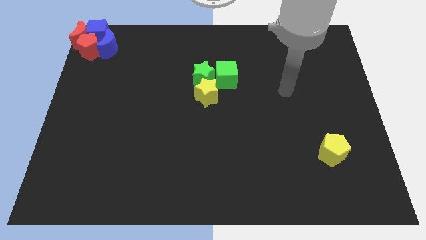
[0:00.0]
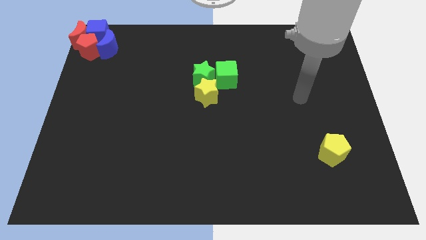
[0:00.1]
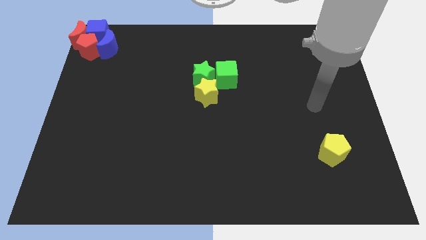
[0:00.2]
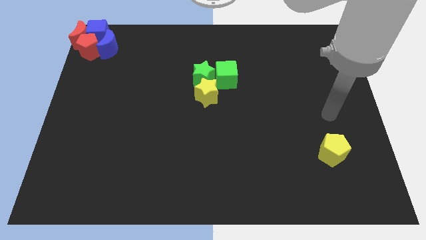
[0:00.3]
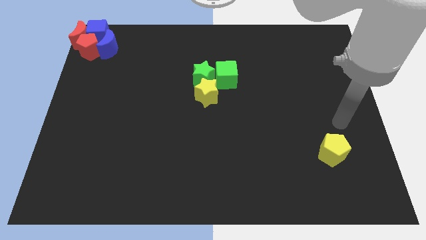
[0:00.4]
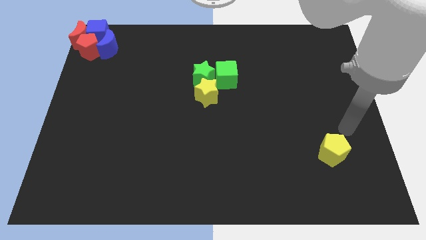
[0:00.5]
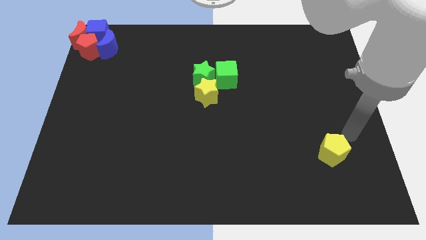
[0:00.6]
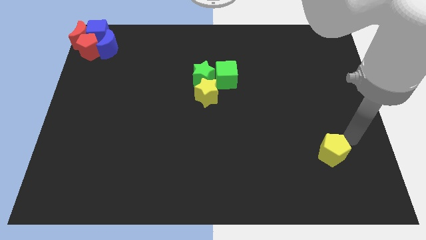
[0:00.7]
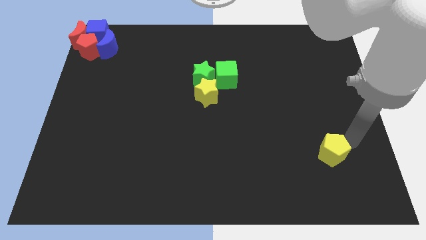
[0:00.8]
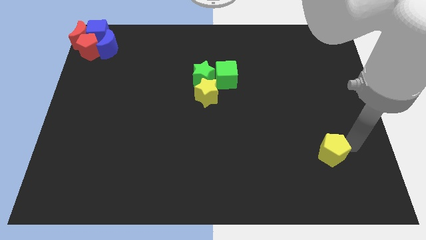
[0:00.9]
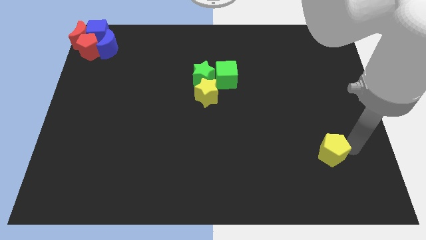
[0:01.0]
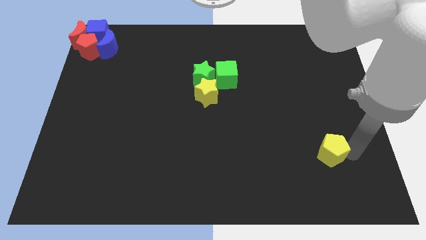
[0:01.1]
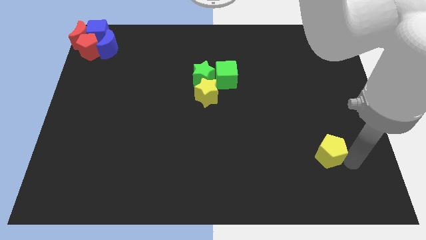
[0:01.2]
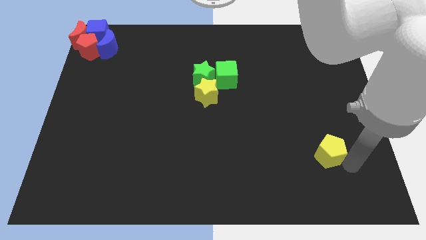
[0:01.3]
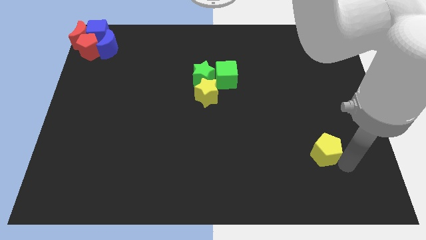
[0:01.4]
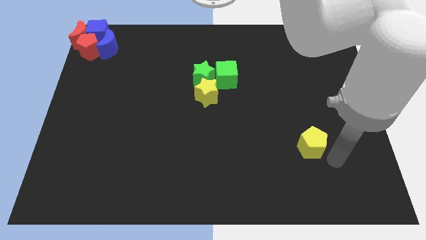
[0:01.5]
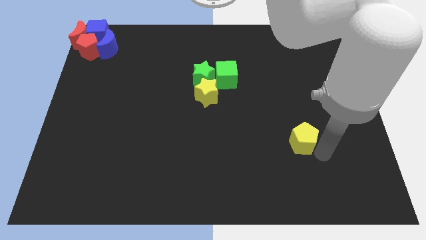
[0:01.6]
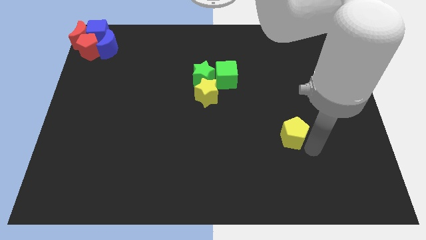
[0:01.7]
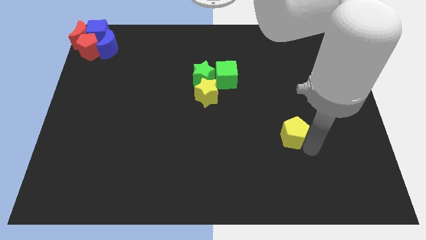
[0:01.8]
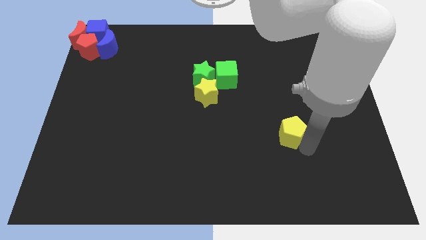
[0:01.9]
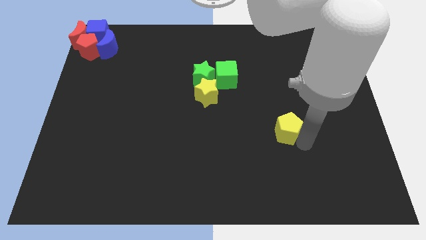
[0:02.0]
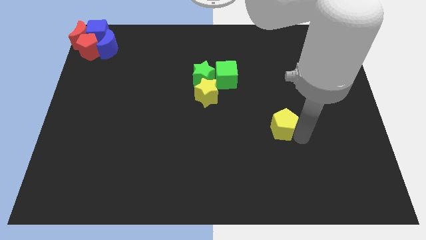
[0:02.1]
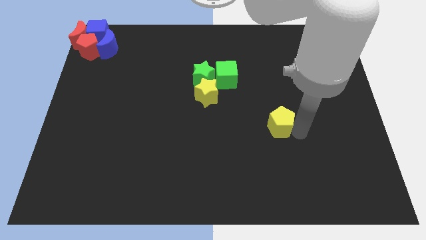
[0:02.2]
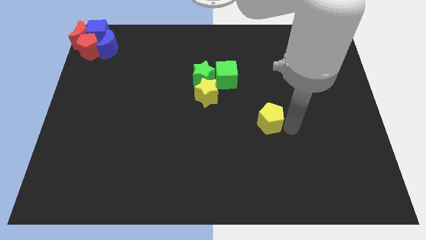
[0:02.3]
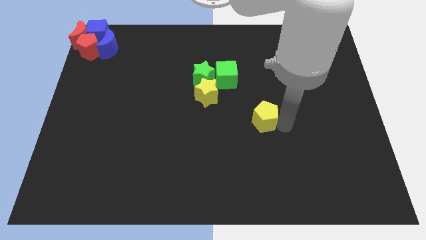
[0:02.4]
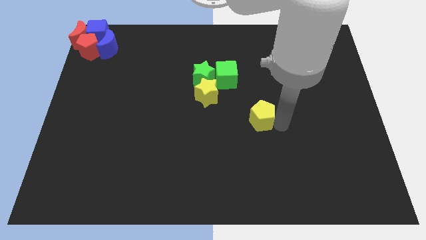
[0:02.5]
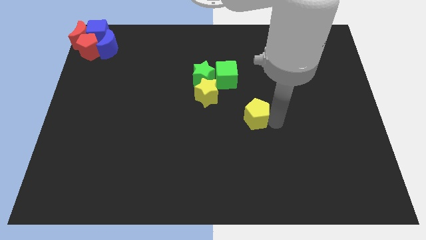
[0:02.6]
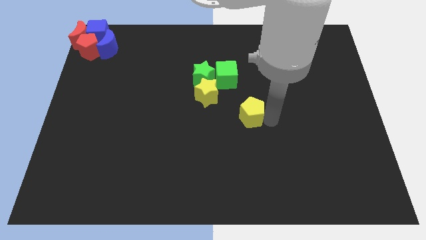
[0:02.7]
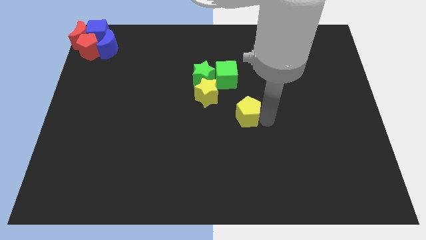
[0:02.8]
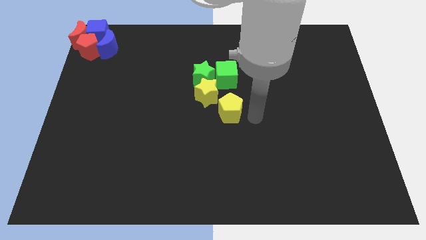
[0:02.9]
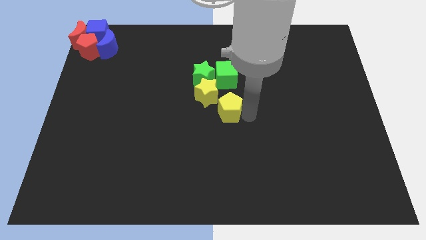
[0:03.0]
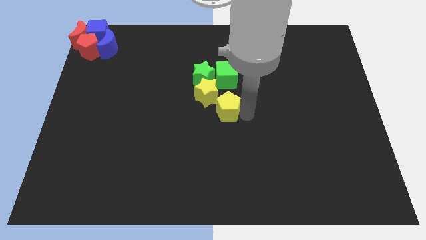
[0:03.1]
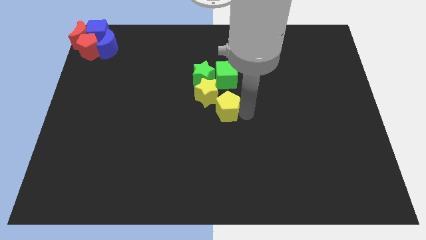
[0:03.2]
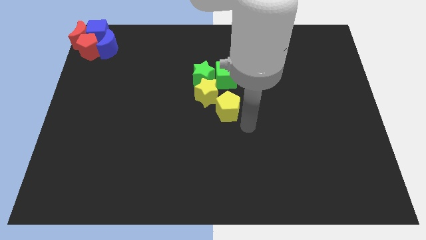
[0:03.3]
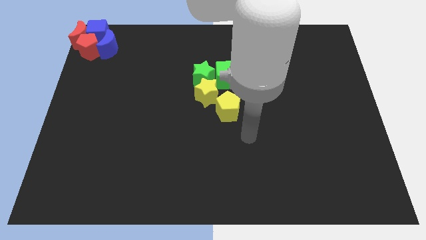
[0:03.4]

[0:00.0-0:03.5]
move the yellow pentagon to the center of the board

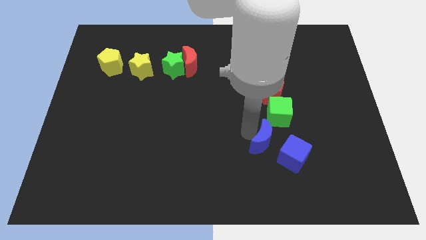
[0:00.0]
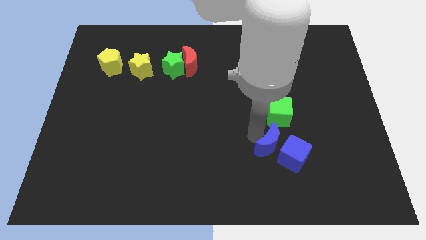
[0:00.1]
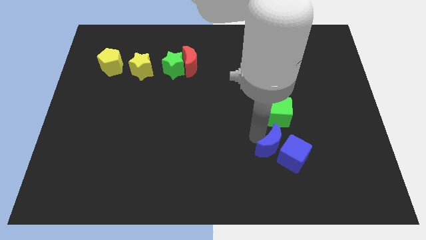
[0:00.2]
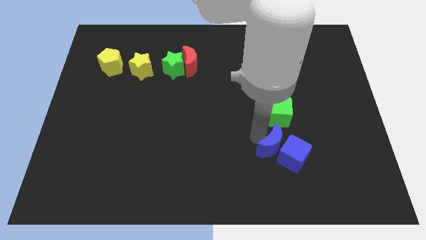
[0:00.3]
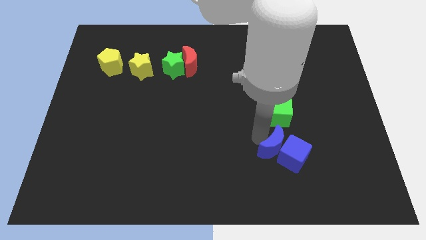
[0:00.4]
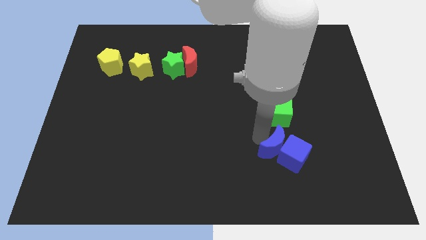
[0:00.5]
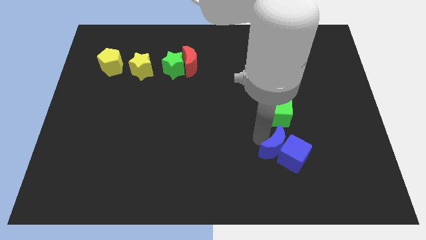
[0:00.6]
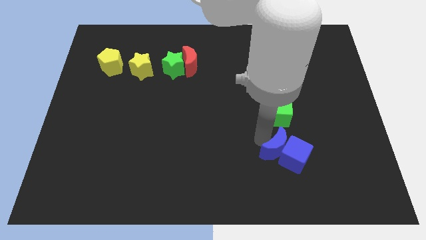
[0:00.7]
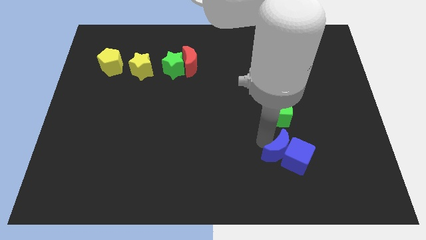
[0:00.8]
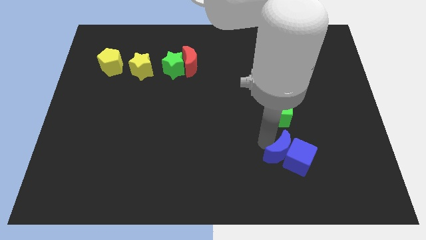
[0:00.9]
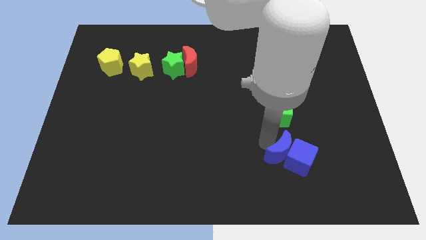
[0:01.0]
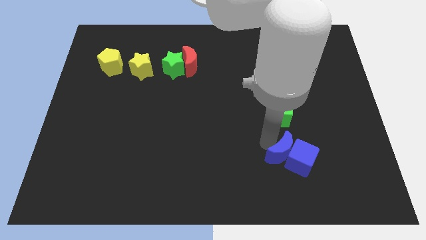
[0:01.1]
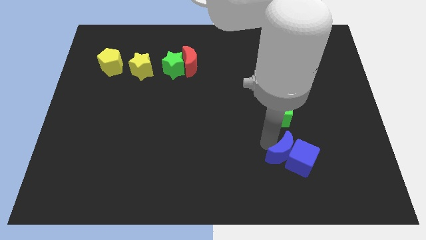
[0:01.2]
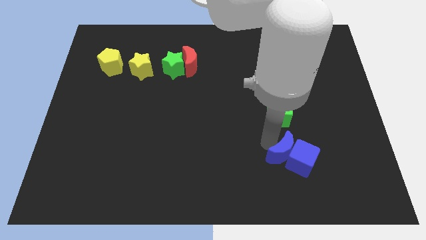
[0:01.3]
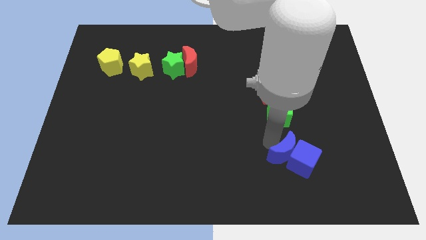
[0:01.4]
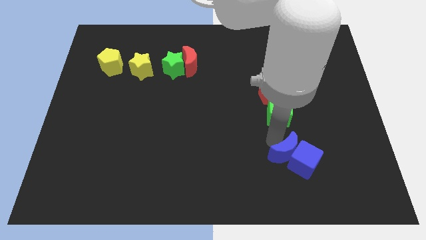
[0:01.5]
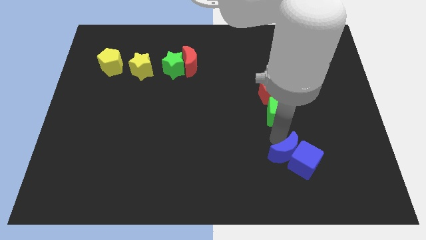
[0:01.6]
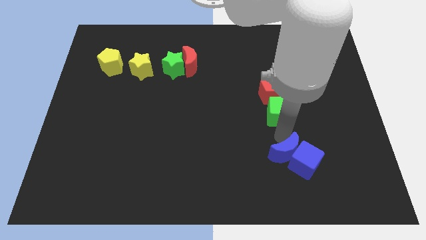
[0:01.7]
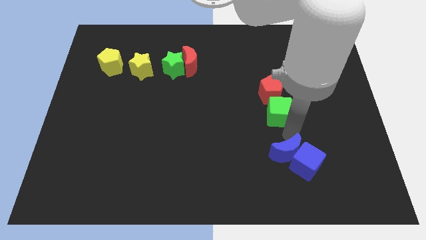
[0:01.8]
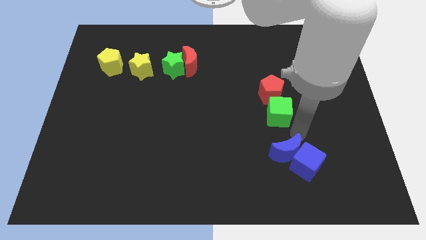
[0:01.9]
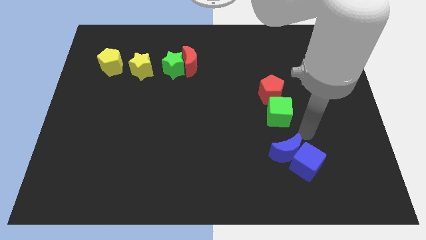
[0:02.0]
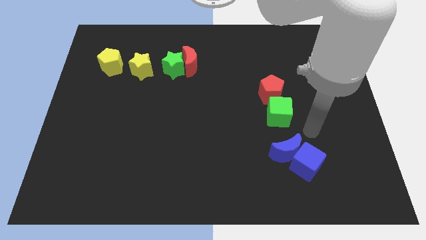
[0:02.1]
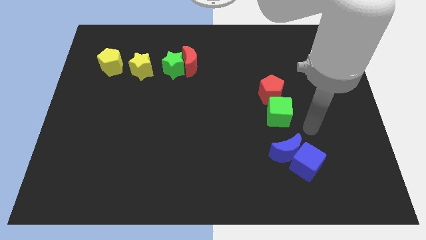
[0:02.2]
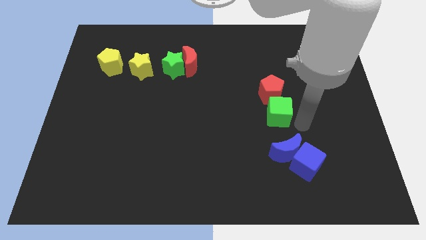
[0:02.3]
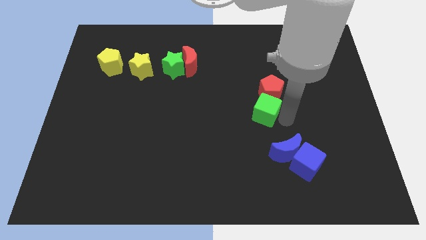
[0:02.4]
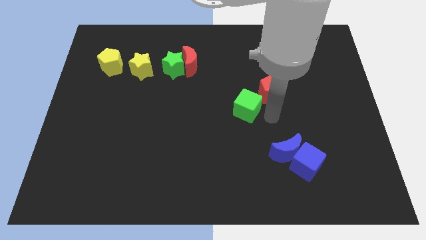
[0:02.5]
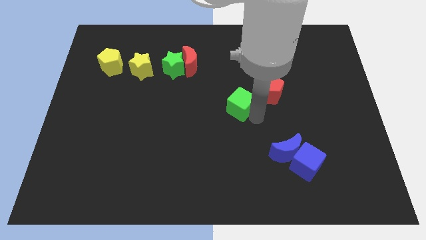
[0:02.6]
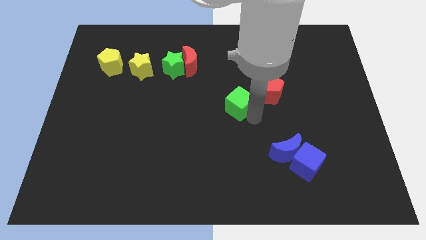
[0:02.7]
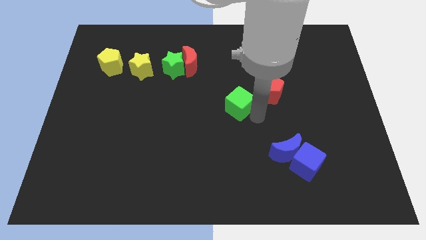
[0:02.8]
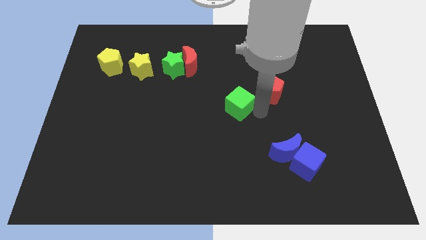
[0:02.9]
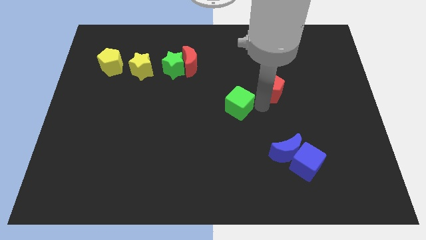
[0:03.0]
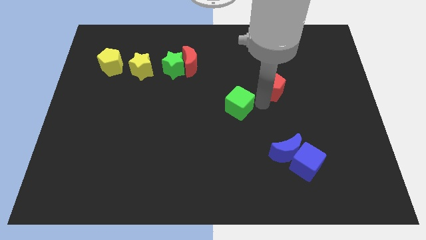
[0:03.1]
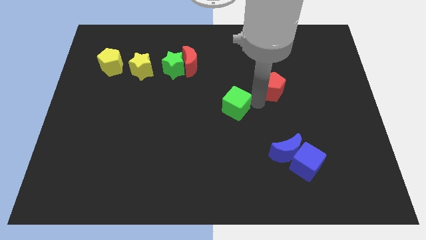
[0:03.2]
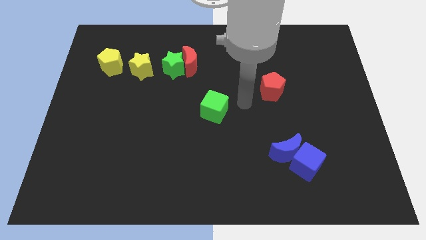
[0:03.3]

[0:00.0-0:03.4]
push the blue crescent into the blue cube

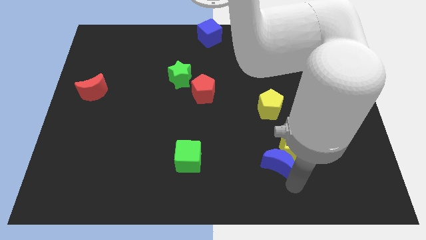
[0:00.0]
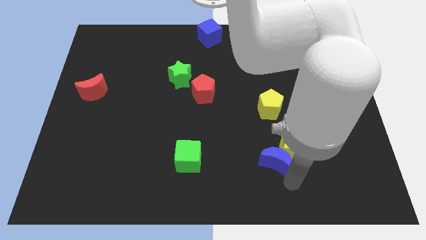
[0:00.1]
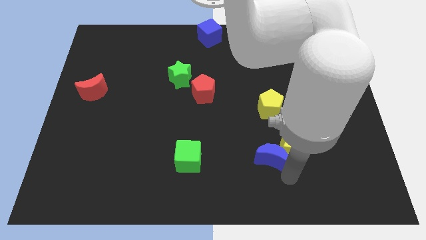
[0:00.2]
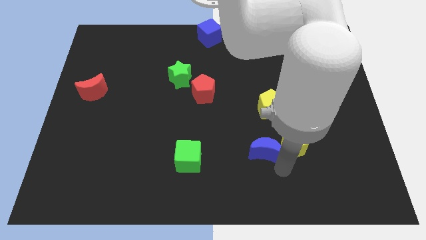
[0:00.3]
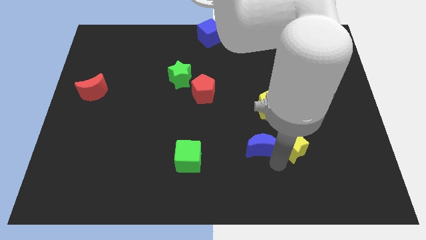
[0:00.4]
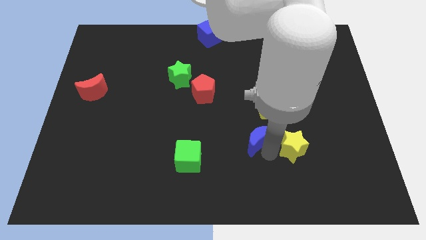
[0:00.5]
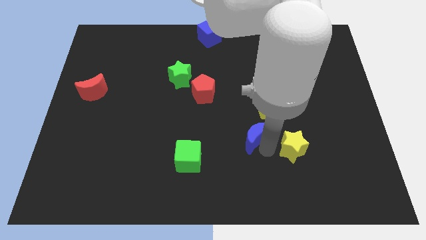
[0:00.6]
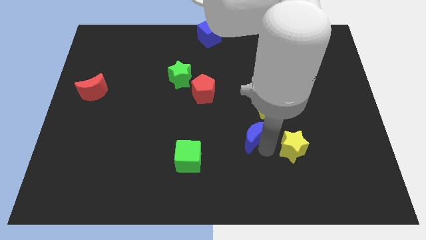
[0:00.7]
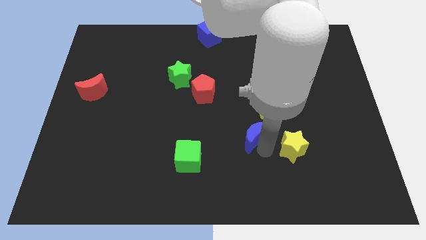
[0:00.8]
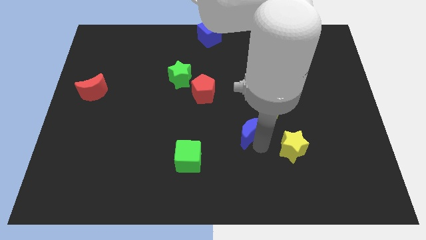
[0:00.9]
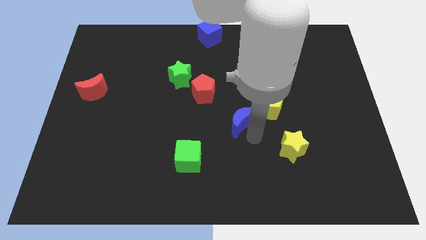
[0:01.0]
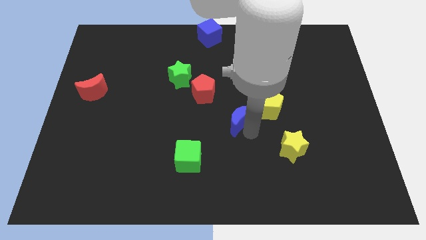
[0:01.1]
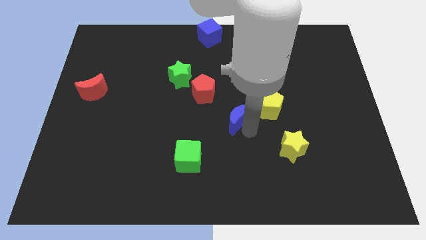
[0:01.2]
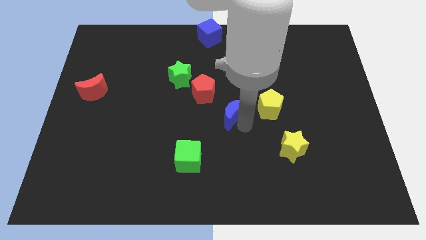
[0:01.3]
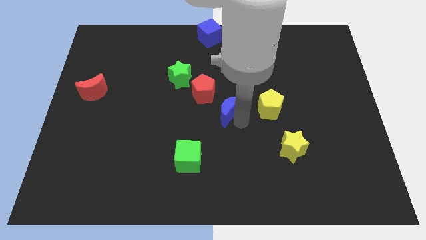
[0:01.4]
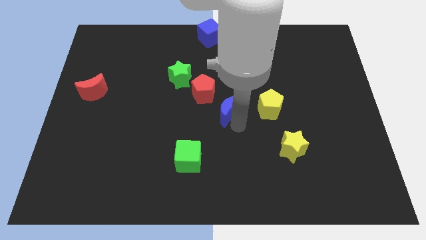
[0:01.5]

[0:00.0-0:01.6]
place blue moon to the left of yellow pentagon

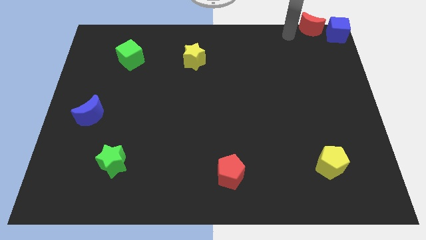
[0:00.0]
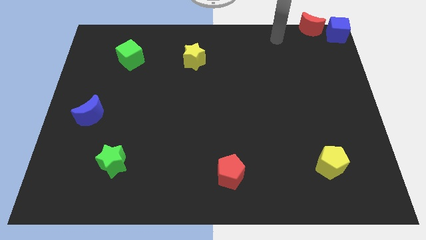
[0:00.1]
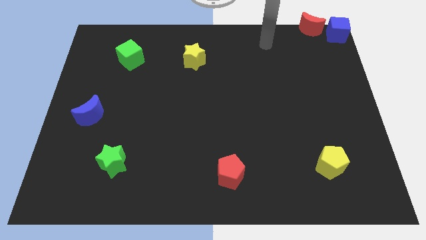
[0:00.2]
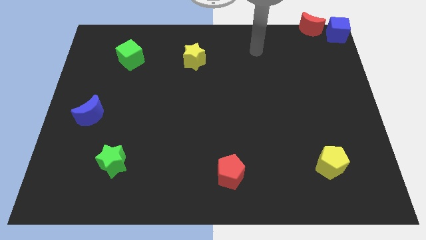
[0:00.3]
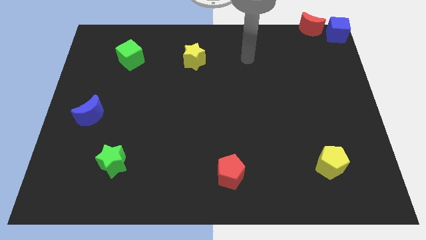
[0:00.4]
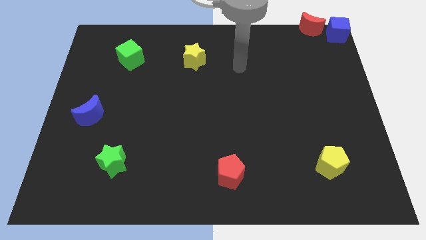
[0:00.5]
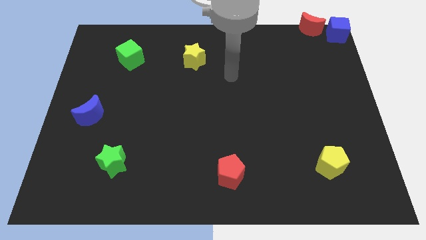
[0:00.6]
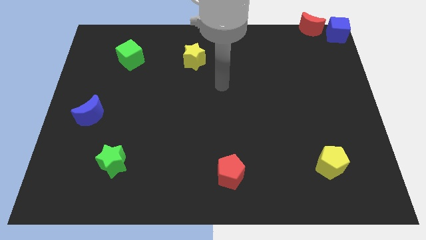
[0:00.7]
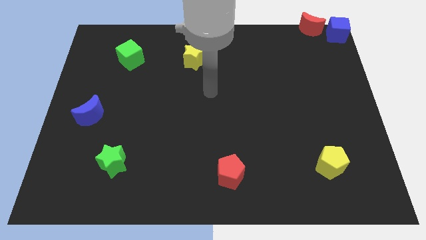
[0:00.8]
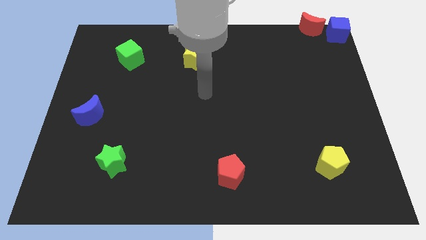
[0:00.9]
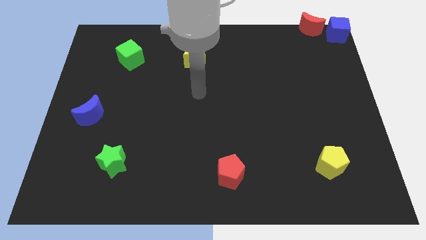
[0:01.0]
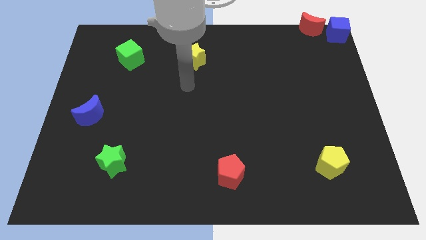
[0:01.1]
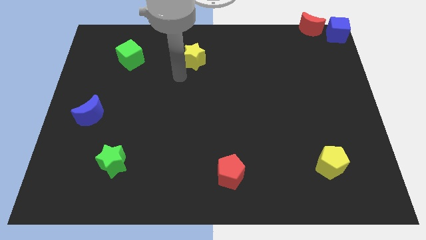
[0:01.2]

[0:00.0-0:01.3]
place the arm below the yellow star
